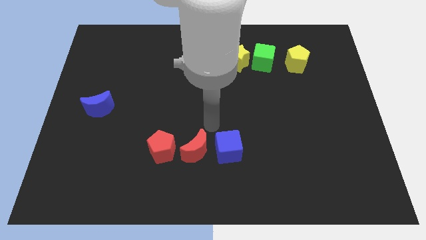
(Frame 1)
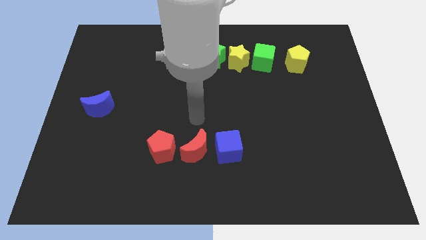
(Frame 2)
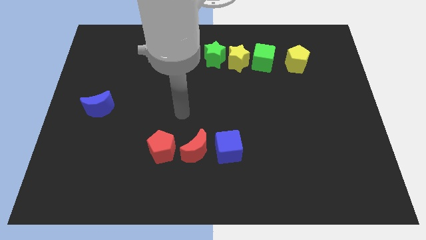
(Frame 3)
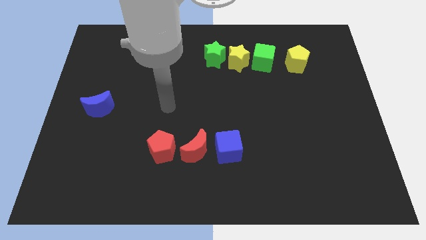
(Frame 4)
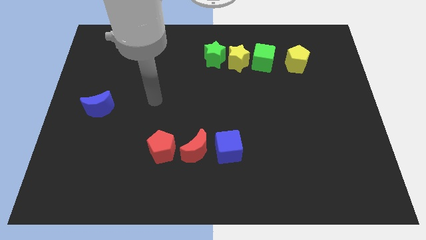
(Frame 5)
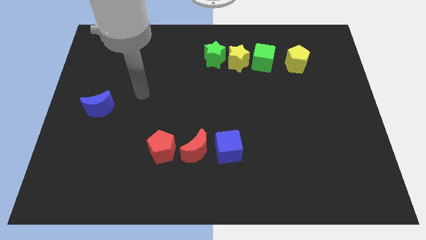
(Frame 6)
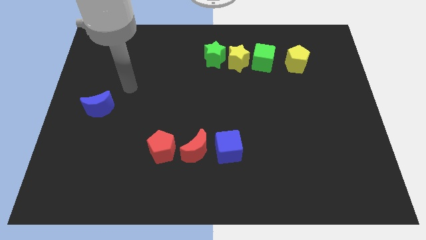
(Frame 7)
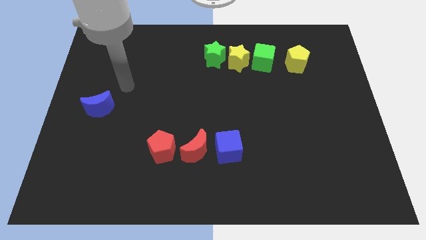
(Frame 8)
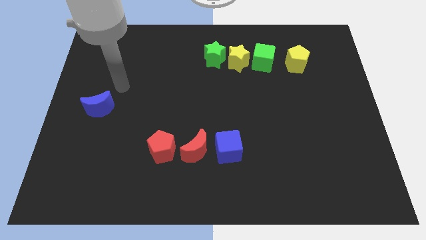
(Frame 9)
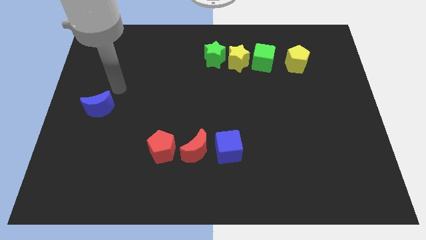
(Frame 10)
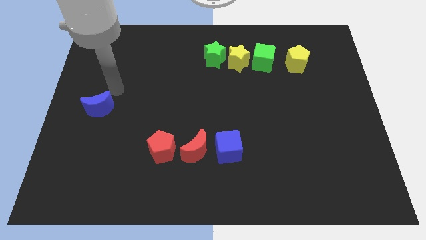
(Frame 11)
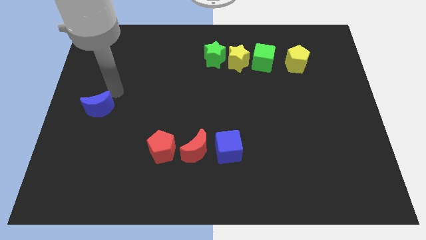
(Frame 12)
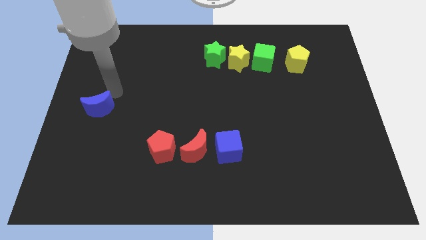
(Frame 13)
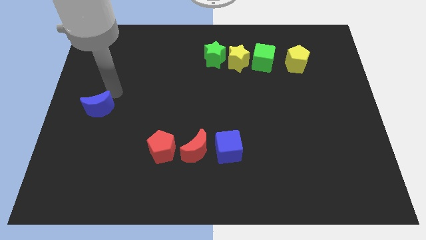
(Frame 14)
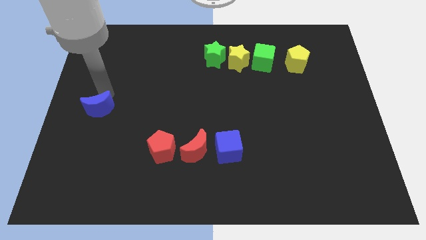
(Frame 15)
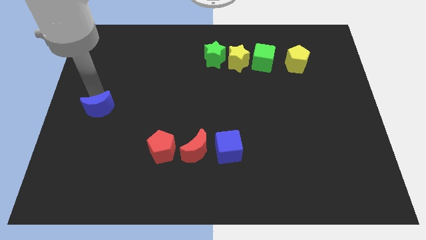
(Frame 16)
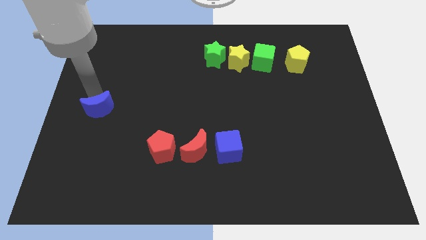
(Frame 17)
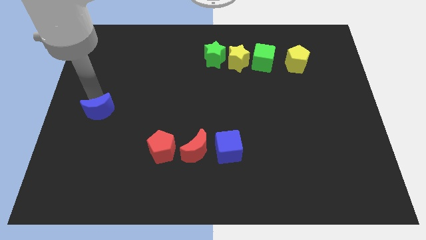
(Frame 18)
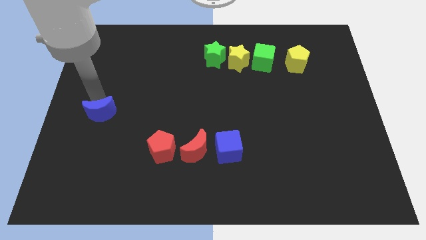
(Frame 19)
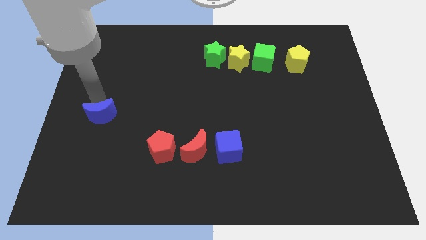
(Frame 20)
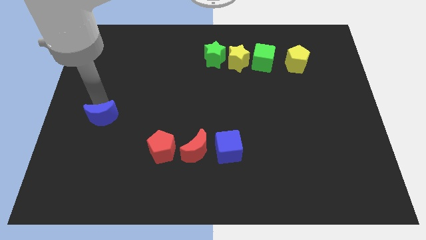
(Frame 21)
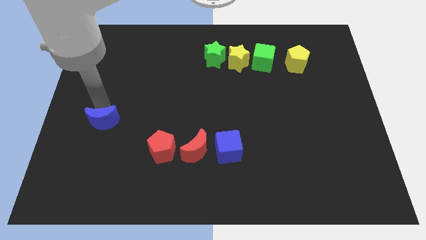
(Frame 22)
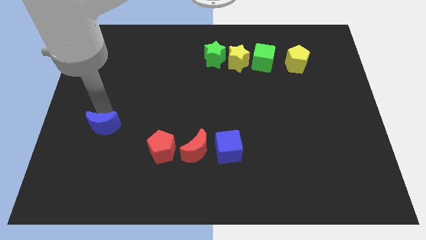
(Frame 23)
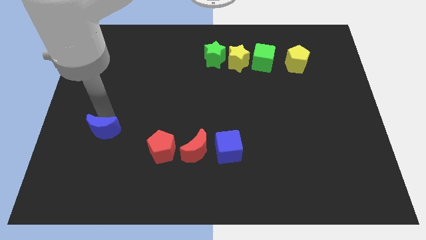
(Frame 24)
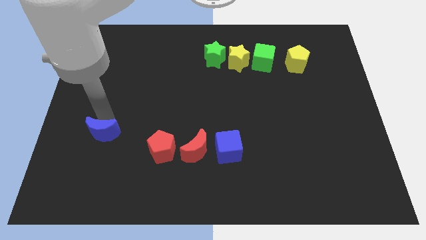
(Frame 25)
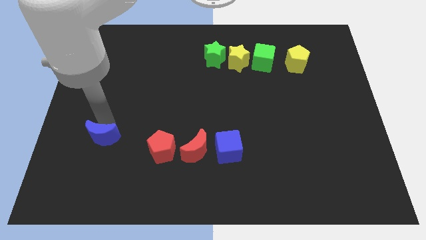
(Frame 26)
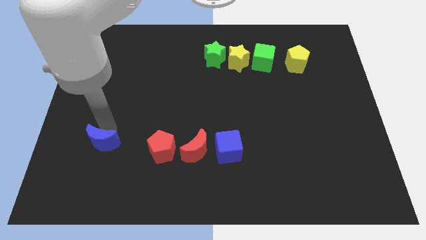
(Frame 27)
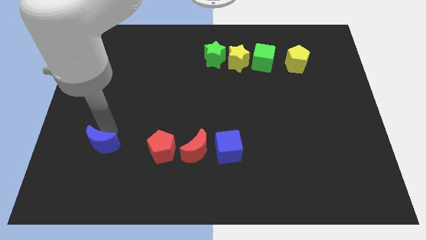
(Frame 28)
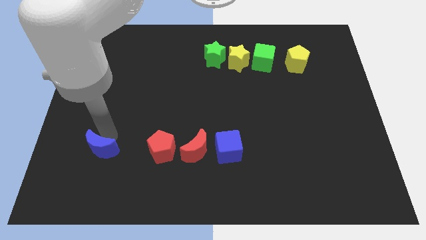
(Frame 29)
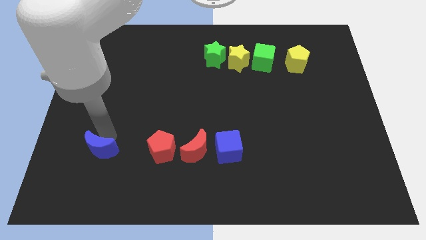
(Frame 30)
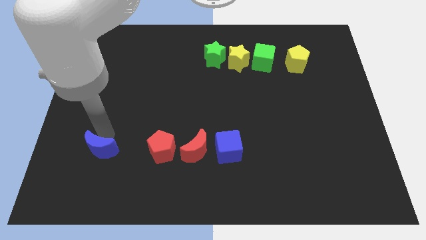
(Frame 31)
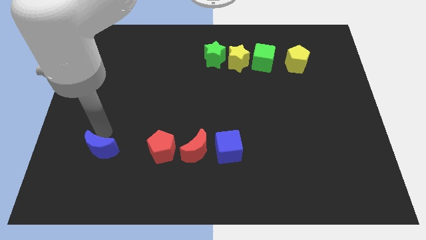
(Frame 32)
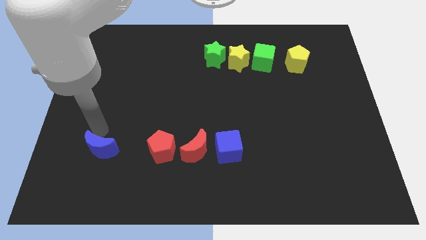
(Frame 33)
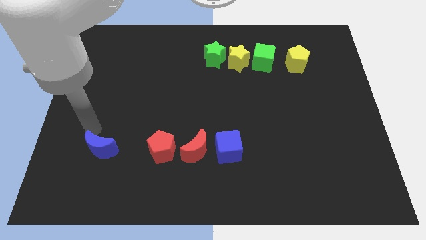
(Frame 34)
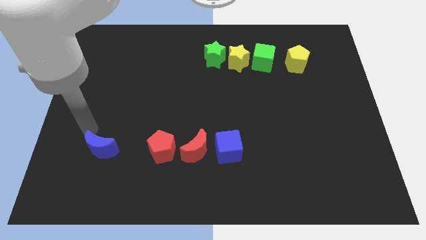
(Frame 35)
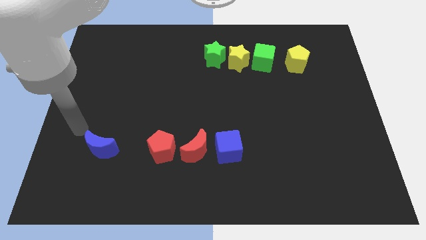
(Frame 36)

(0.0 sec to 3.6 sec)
place the blue crescent at the left side of the red pentagon

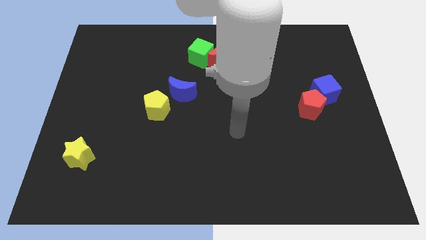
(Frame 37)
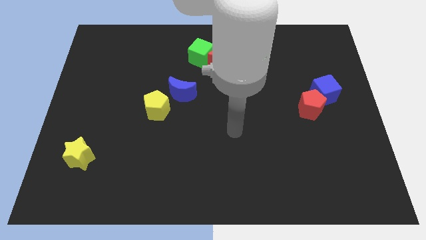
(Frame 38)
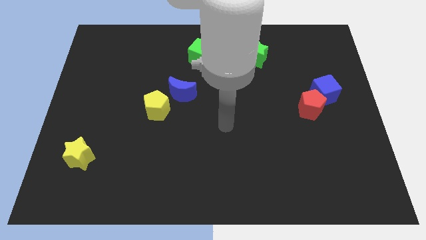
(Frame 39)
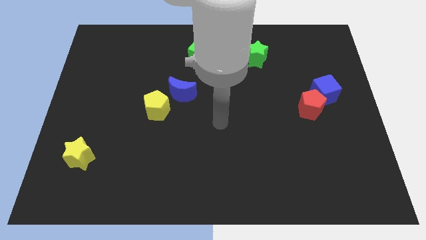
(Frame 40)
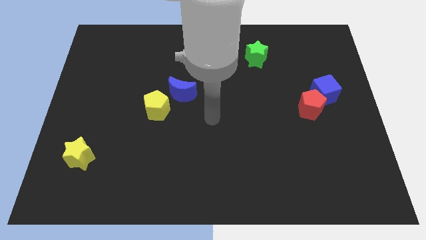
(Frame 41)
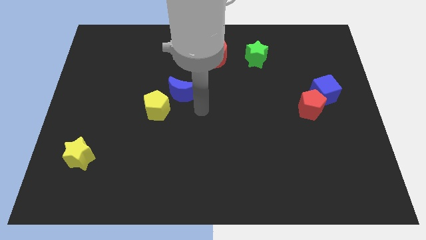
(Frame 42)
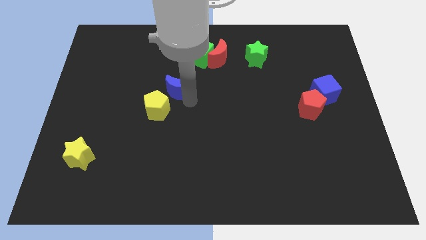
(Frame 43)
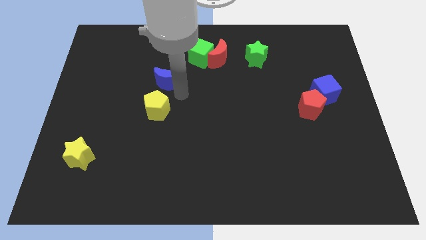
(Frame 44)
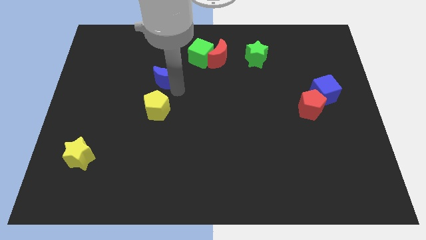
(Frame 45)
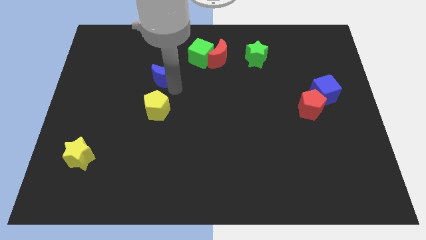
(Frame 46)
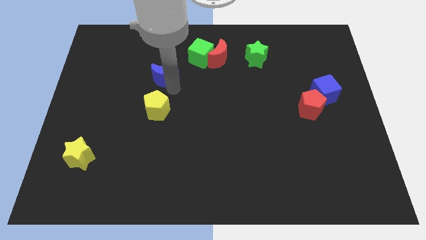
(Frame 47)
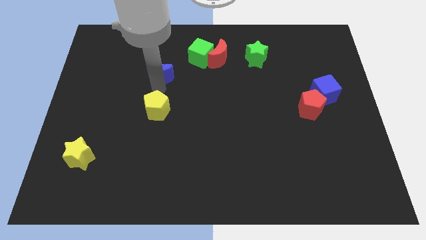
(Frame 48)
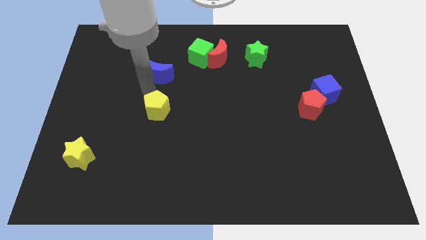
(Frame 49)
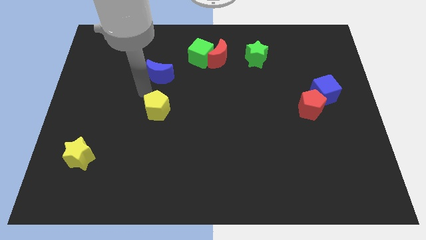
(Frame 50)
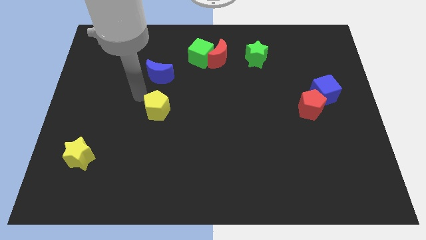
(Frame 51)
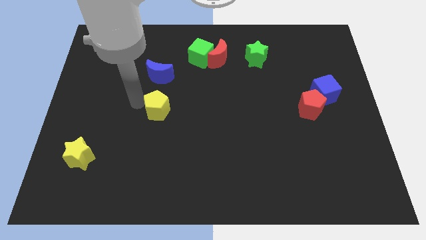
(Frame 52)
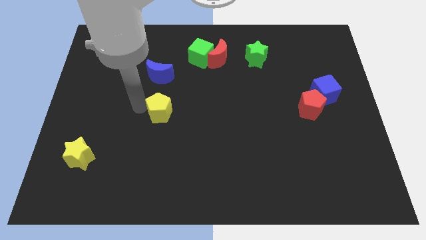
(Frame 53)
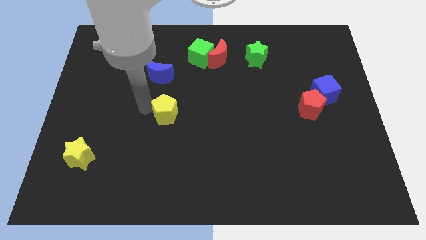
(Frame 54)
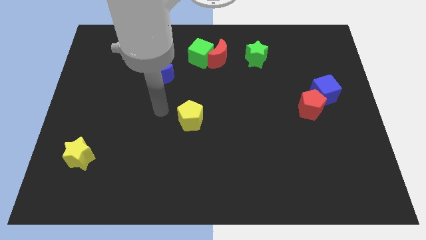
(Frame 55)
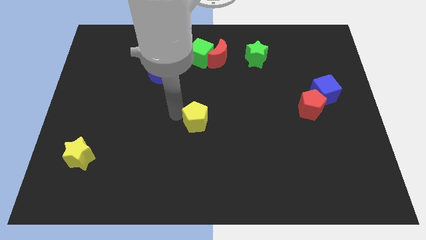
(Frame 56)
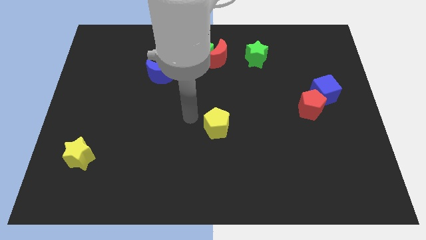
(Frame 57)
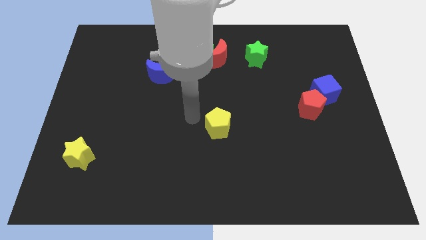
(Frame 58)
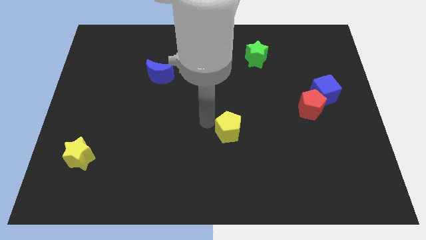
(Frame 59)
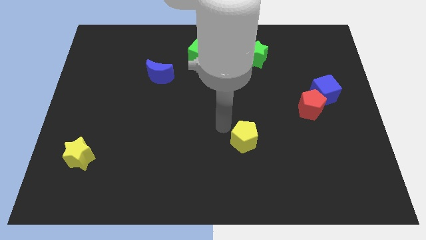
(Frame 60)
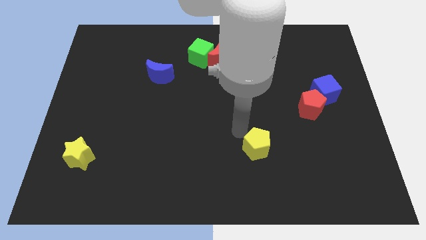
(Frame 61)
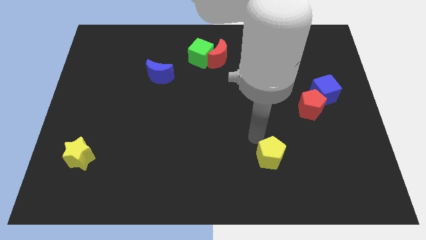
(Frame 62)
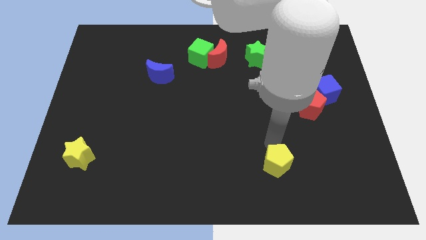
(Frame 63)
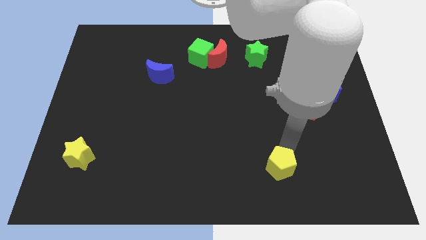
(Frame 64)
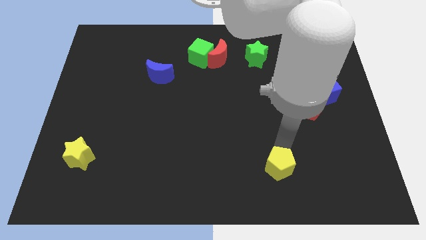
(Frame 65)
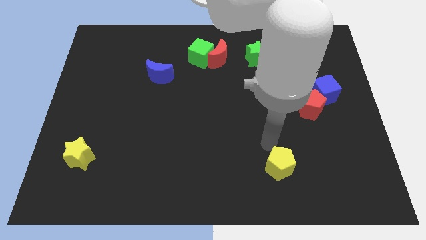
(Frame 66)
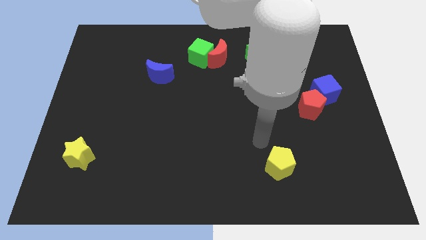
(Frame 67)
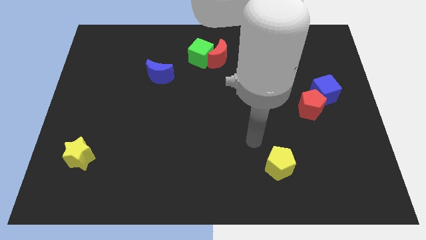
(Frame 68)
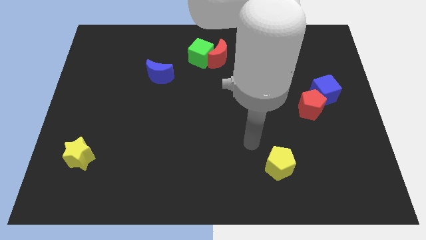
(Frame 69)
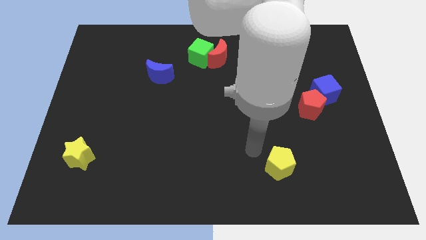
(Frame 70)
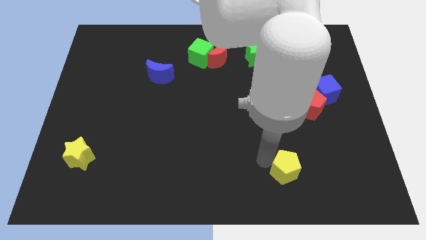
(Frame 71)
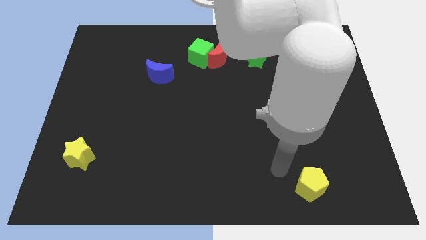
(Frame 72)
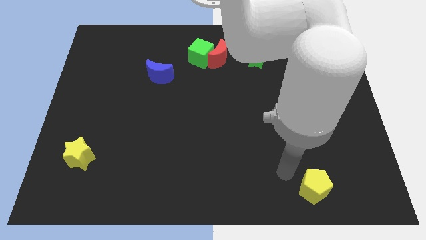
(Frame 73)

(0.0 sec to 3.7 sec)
separate the yellow pentagon from the blue moon

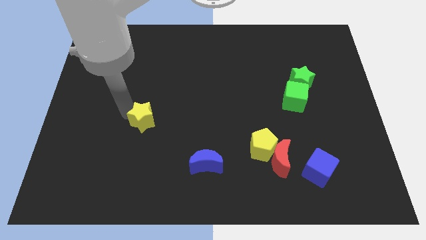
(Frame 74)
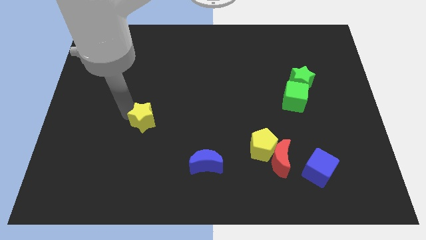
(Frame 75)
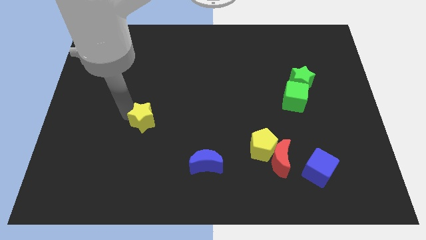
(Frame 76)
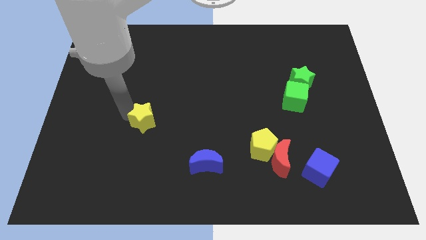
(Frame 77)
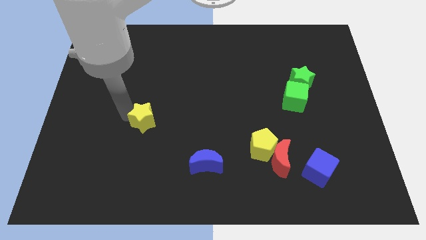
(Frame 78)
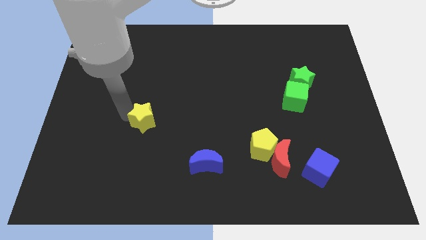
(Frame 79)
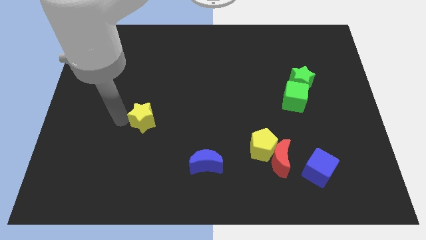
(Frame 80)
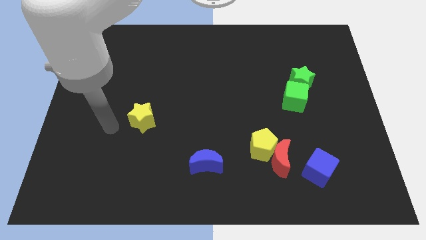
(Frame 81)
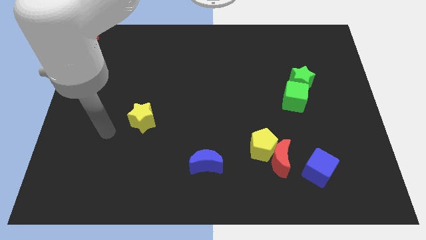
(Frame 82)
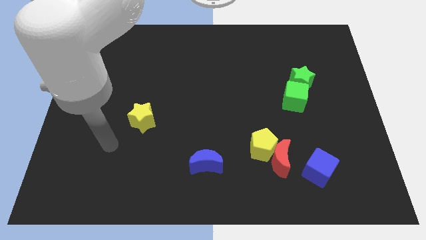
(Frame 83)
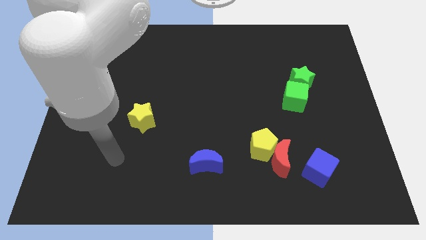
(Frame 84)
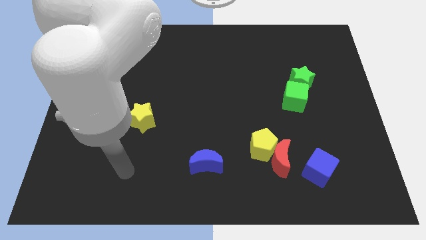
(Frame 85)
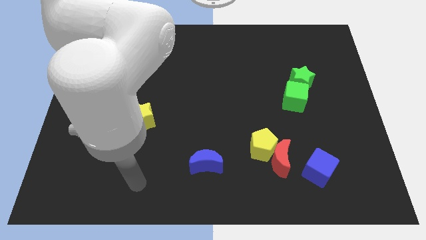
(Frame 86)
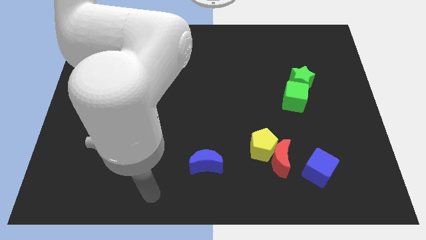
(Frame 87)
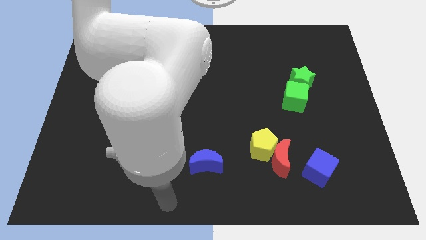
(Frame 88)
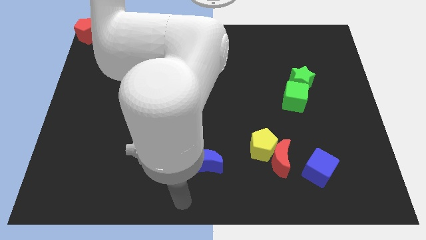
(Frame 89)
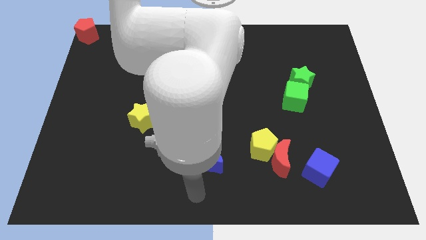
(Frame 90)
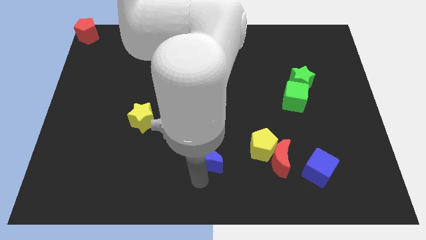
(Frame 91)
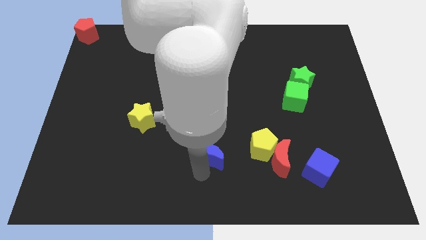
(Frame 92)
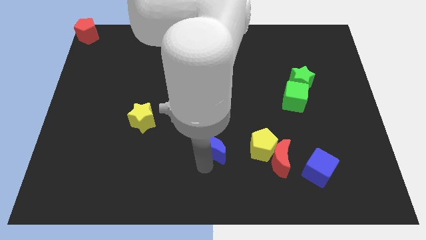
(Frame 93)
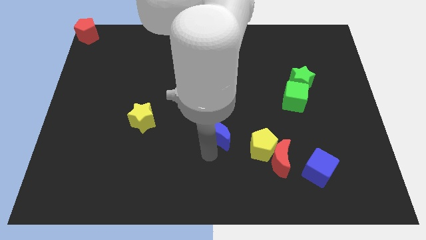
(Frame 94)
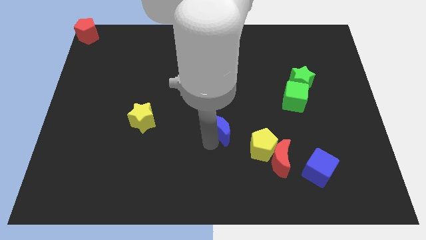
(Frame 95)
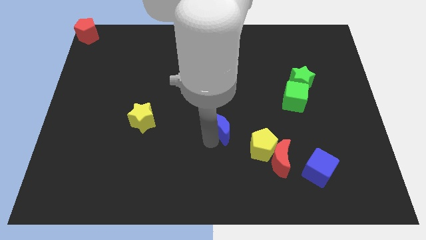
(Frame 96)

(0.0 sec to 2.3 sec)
place the blue moon in between the yellow star and yellow pentagon
